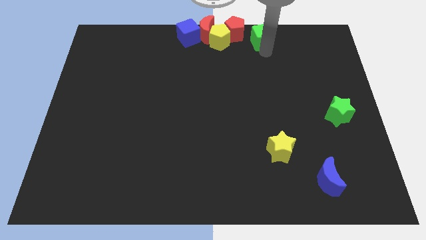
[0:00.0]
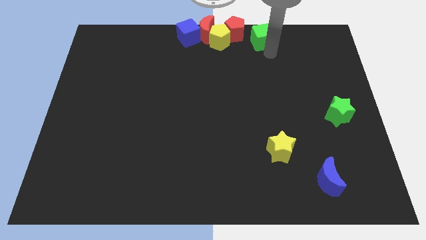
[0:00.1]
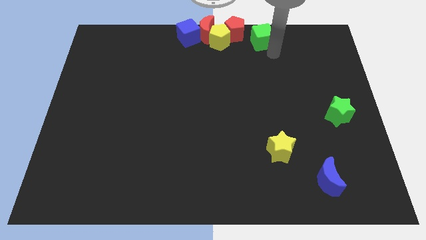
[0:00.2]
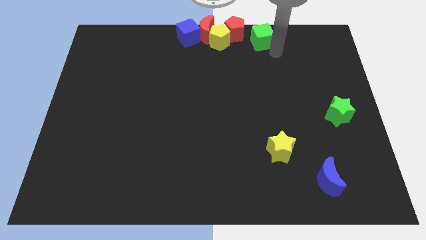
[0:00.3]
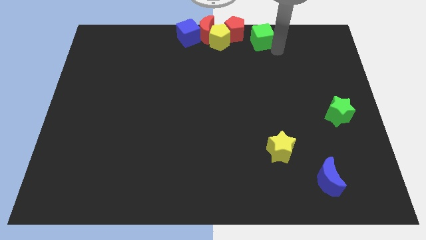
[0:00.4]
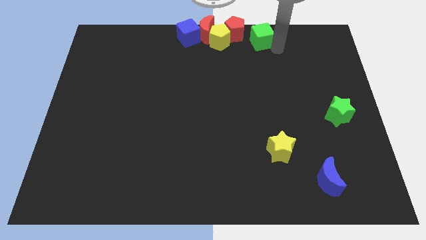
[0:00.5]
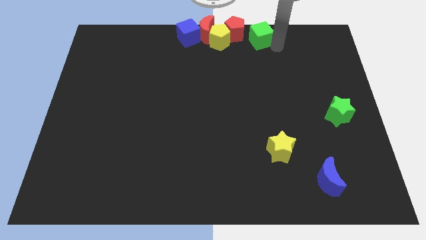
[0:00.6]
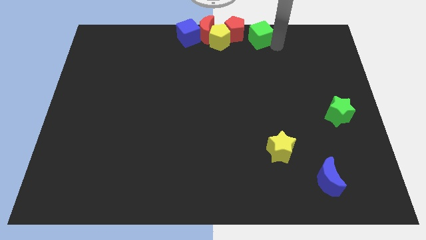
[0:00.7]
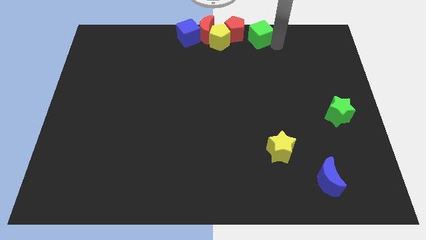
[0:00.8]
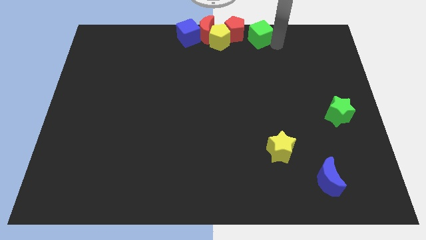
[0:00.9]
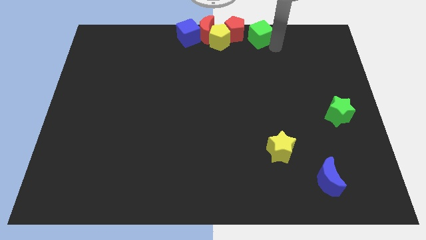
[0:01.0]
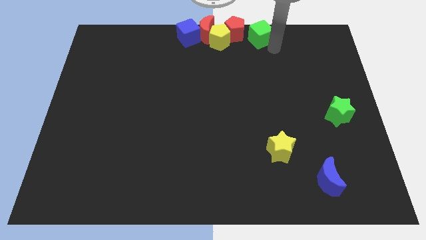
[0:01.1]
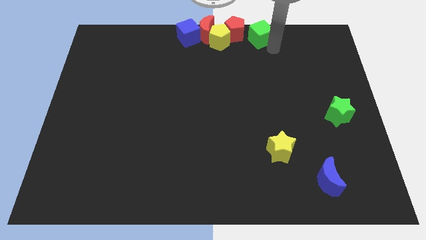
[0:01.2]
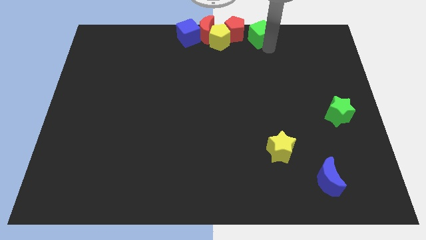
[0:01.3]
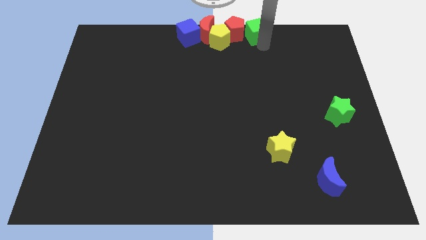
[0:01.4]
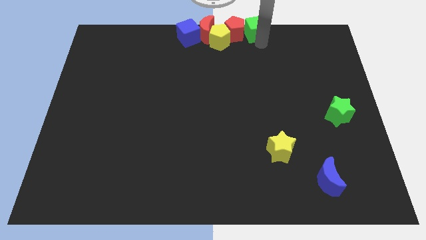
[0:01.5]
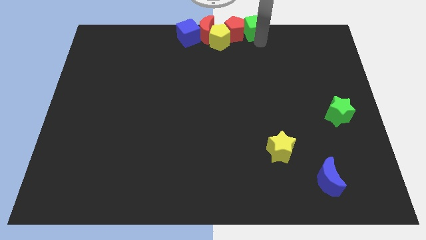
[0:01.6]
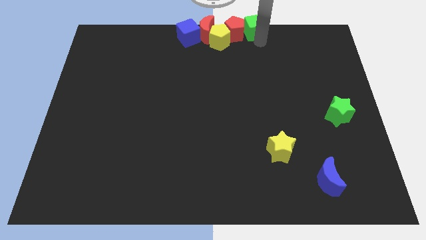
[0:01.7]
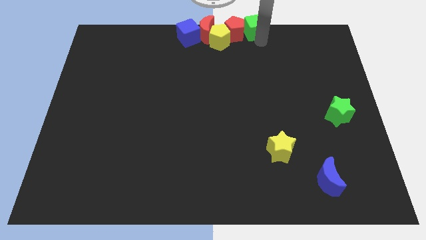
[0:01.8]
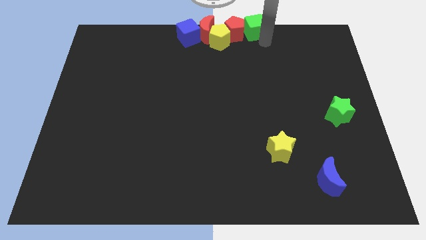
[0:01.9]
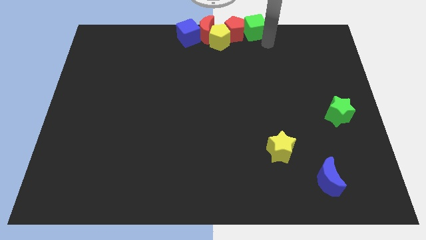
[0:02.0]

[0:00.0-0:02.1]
move the green cube into the red pentagon

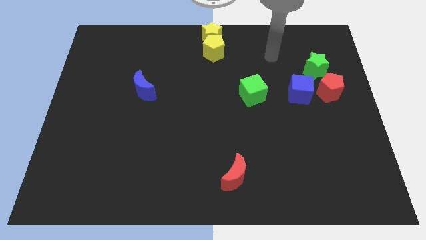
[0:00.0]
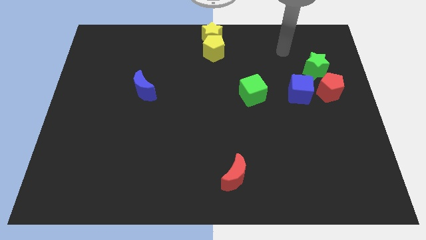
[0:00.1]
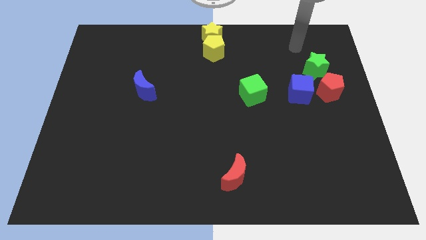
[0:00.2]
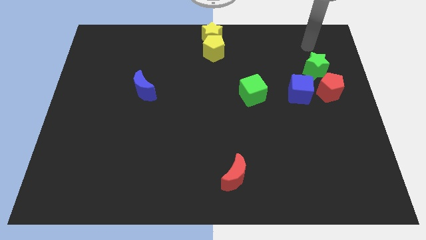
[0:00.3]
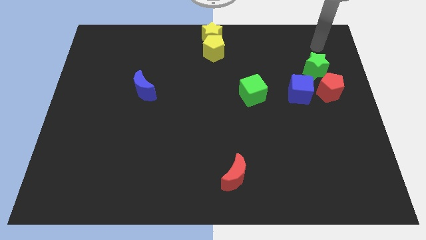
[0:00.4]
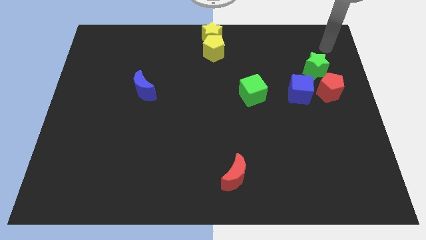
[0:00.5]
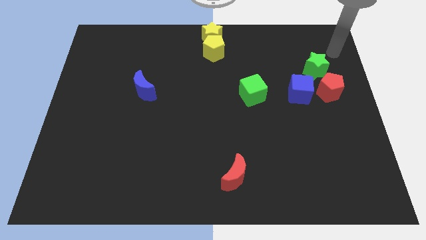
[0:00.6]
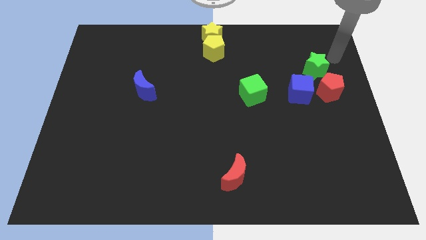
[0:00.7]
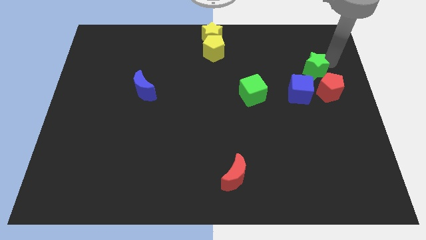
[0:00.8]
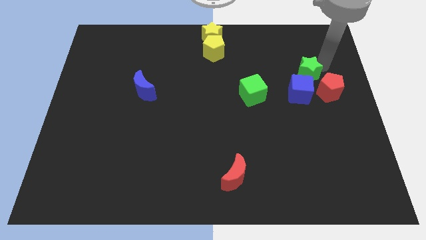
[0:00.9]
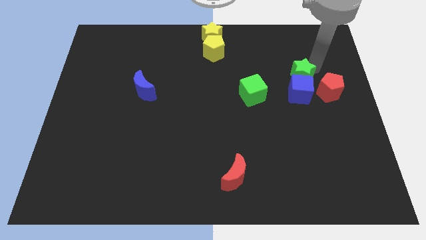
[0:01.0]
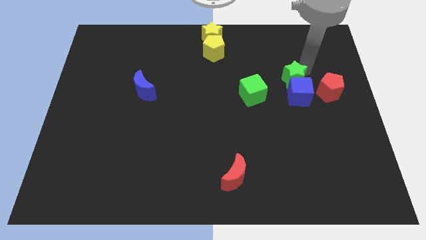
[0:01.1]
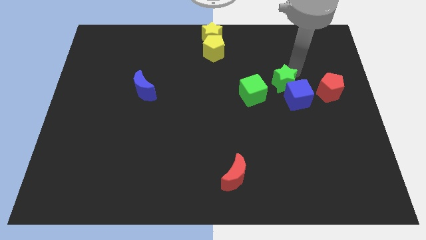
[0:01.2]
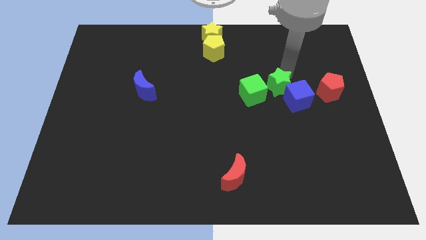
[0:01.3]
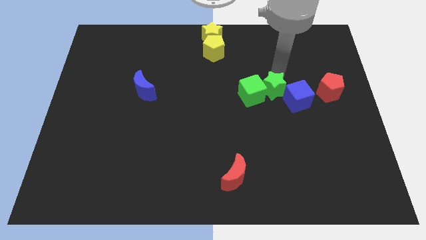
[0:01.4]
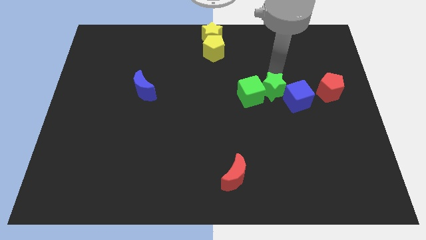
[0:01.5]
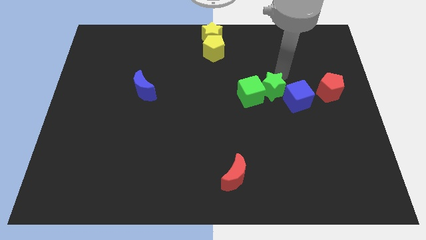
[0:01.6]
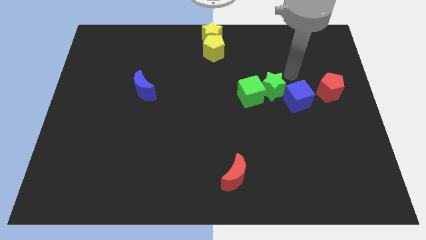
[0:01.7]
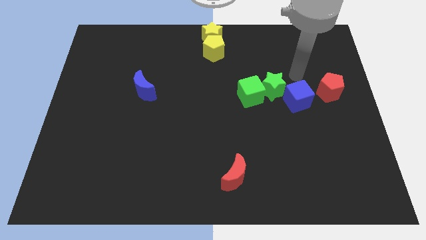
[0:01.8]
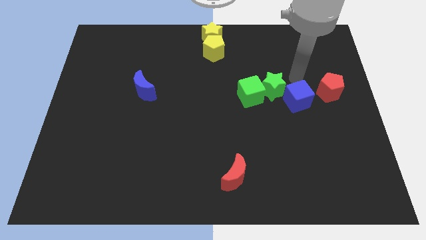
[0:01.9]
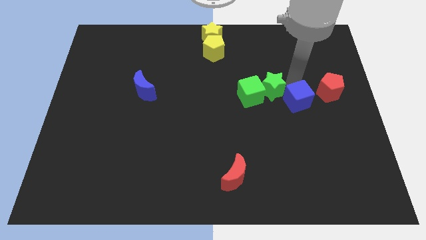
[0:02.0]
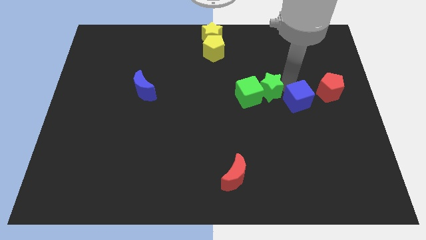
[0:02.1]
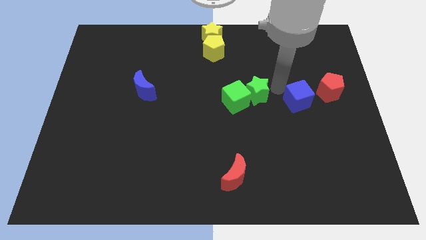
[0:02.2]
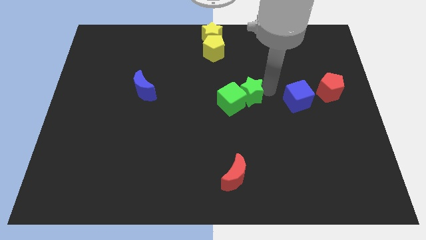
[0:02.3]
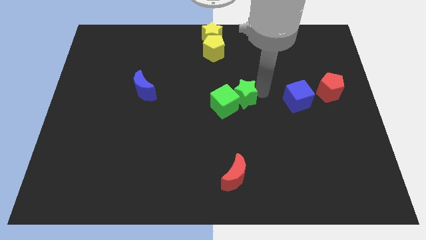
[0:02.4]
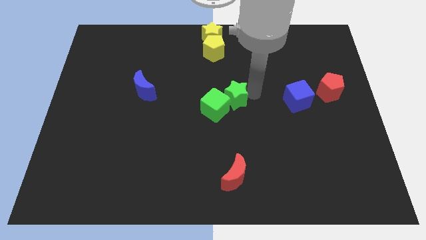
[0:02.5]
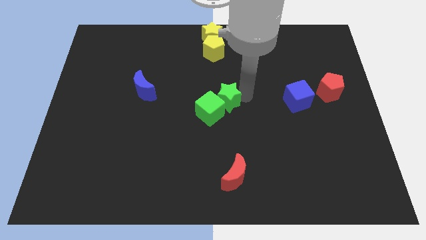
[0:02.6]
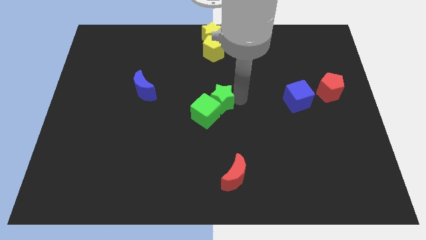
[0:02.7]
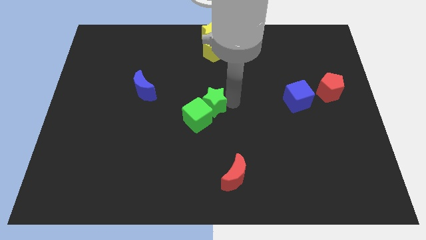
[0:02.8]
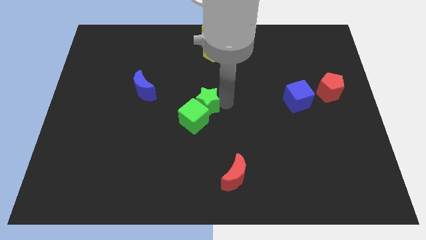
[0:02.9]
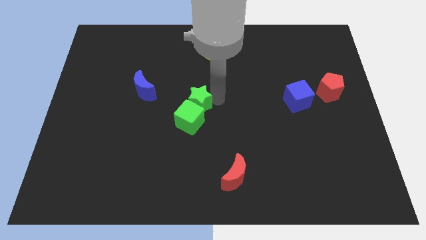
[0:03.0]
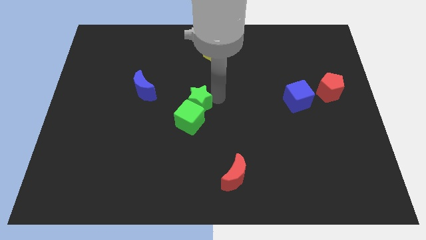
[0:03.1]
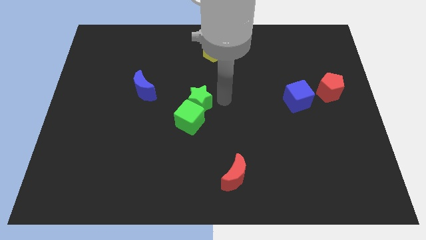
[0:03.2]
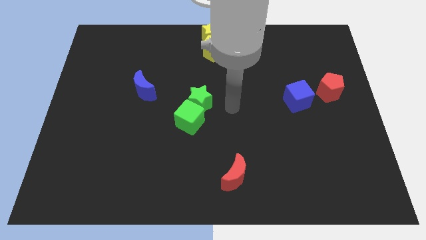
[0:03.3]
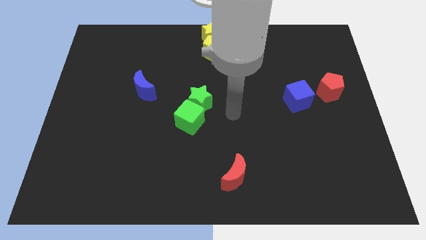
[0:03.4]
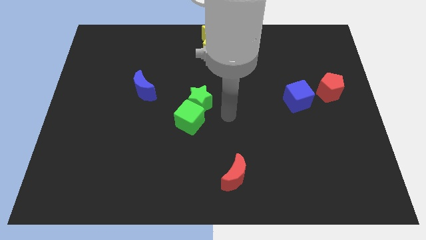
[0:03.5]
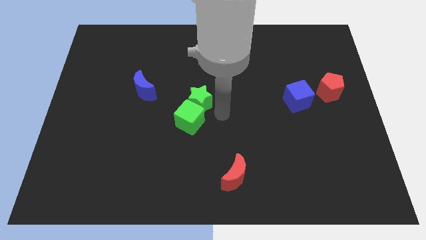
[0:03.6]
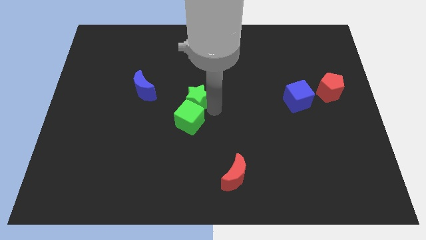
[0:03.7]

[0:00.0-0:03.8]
push the green cube towards the right side of the blue crescent

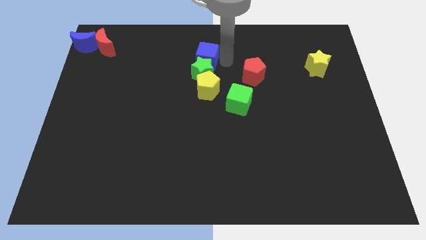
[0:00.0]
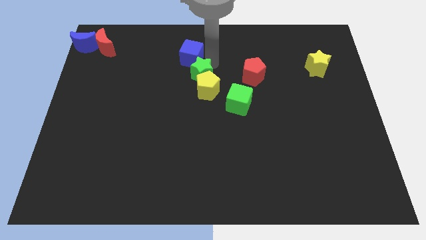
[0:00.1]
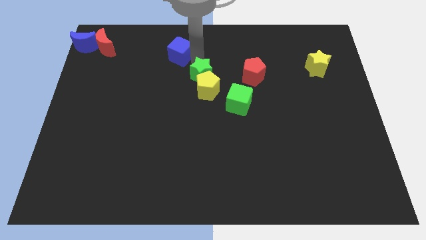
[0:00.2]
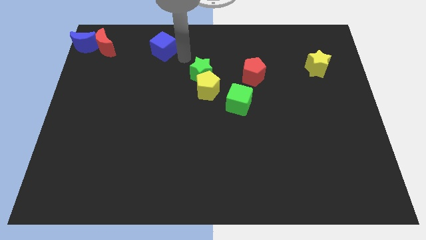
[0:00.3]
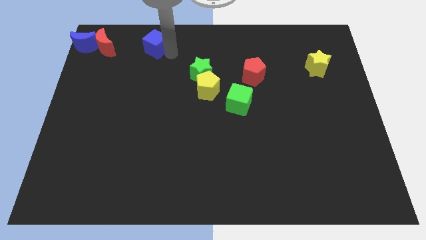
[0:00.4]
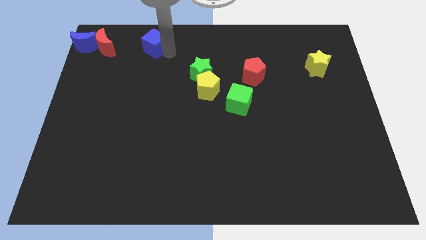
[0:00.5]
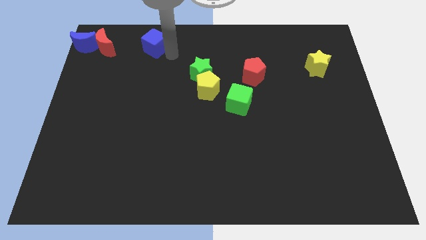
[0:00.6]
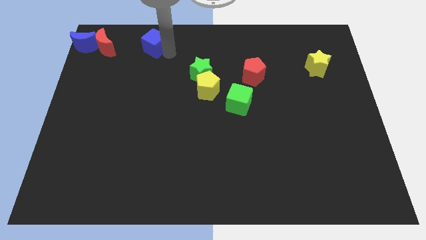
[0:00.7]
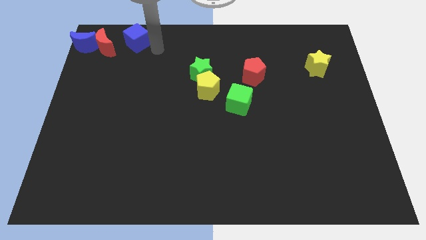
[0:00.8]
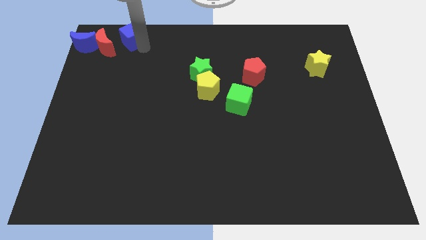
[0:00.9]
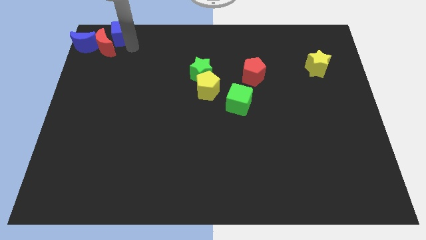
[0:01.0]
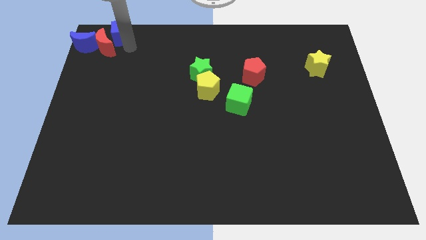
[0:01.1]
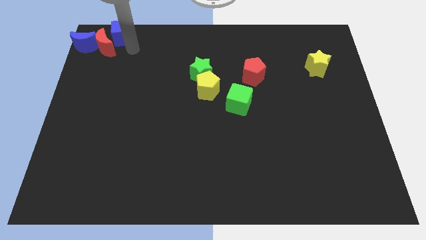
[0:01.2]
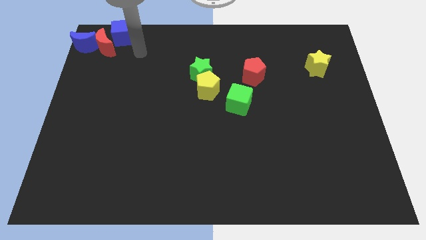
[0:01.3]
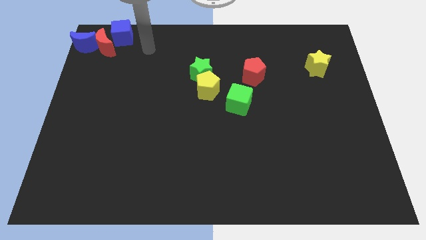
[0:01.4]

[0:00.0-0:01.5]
push the blue cube towards the right red crescent

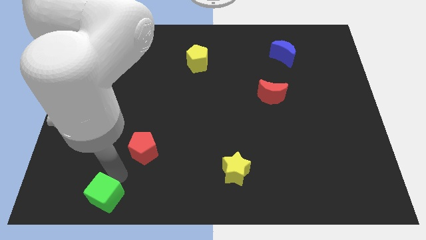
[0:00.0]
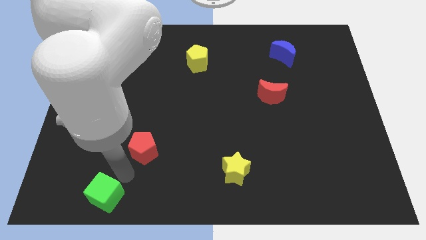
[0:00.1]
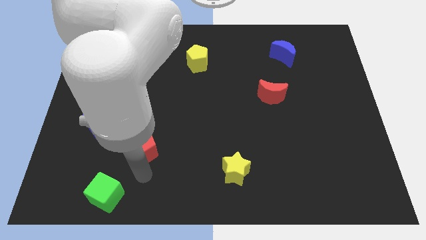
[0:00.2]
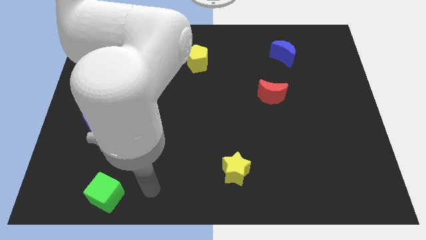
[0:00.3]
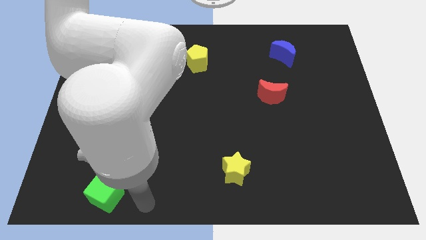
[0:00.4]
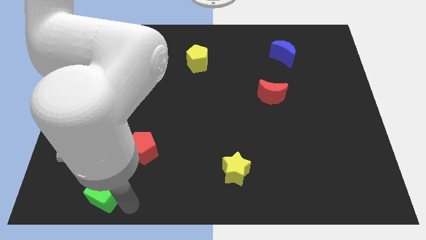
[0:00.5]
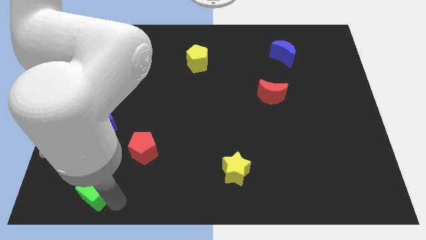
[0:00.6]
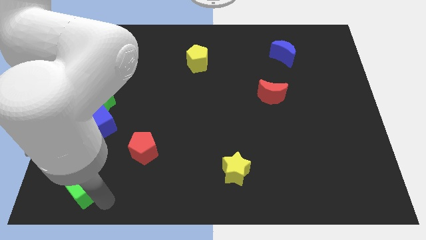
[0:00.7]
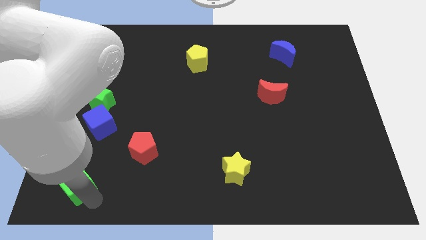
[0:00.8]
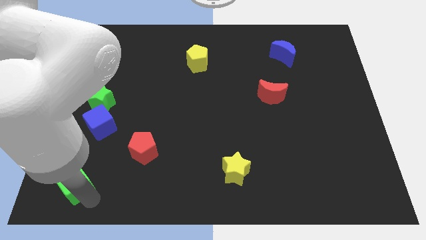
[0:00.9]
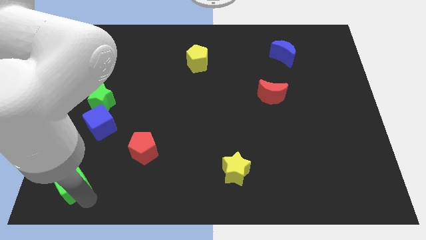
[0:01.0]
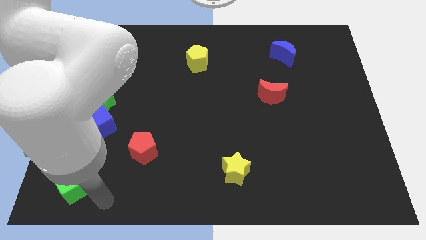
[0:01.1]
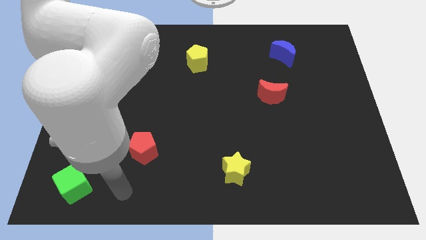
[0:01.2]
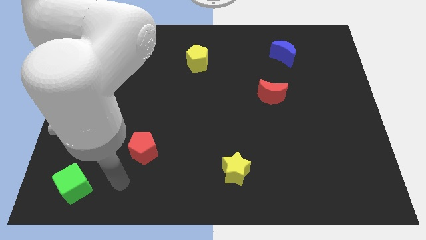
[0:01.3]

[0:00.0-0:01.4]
push the green cube to the bottom left of the board
